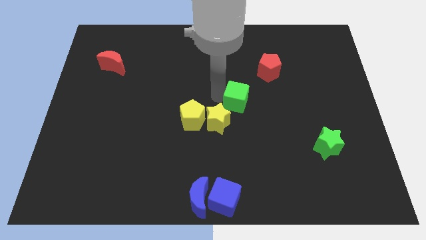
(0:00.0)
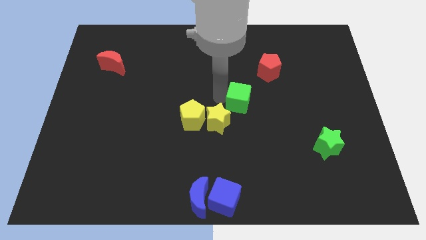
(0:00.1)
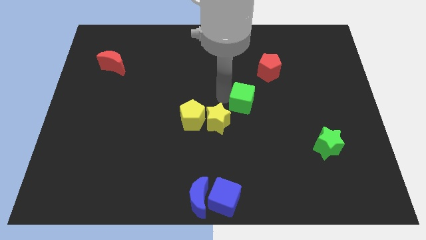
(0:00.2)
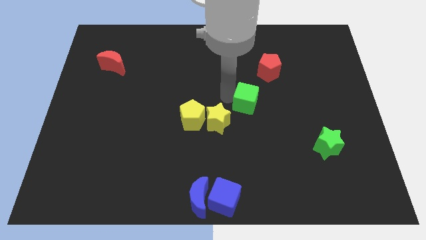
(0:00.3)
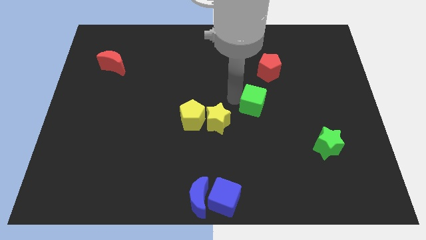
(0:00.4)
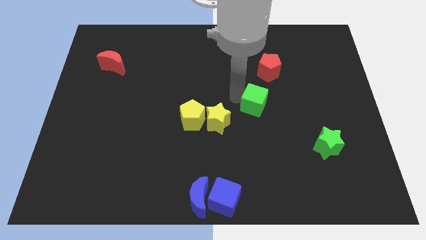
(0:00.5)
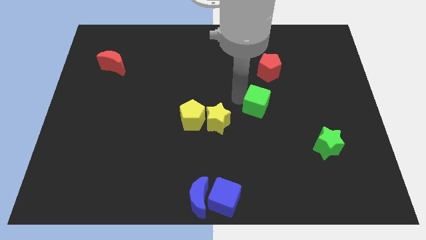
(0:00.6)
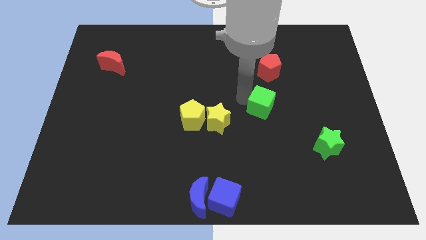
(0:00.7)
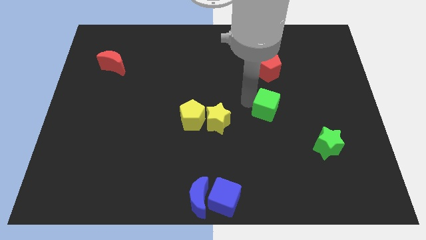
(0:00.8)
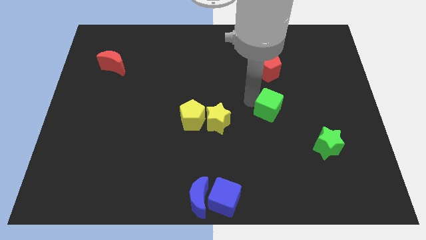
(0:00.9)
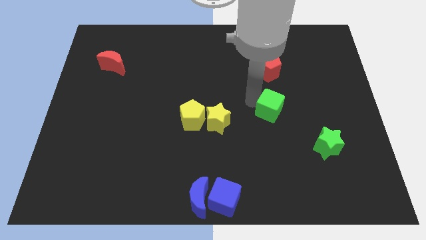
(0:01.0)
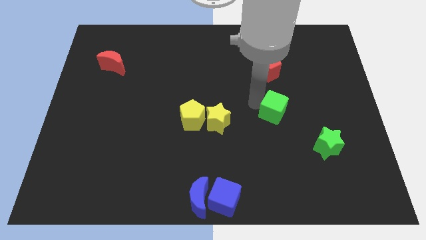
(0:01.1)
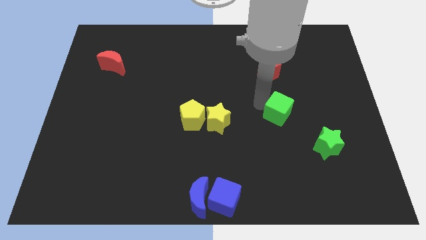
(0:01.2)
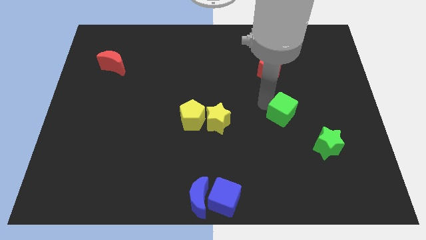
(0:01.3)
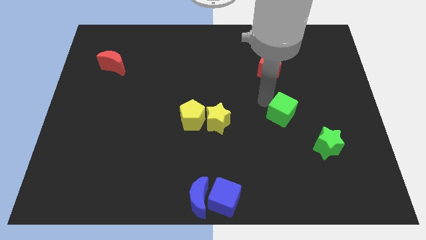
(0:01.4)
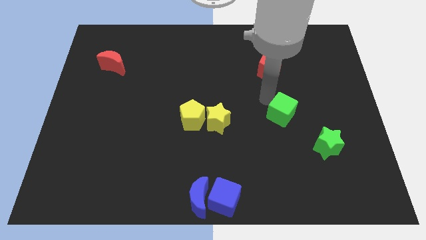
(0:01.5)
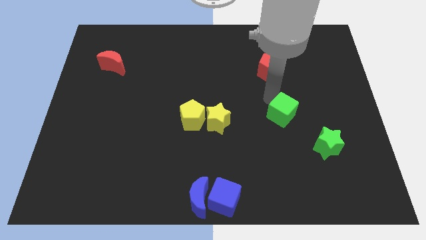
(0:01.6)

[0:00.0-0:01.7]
separate the green cube from yellow blocks

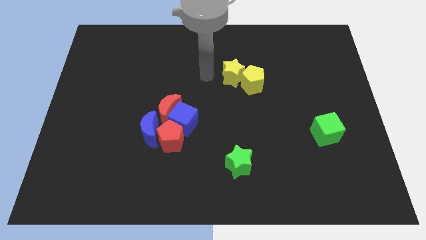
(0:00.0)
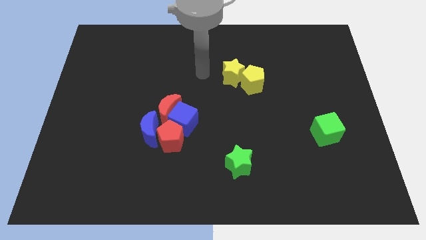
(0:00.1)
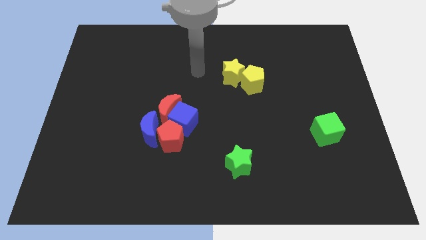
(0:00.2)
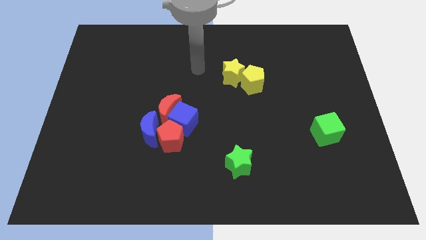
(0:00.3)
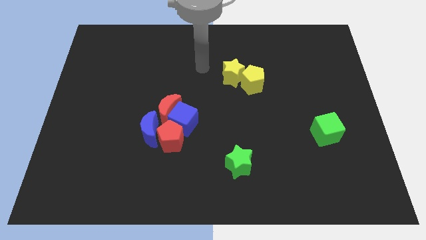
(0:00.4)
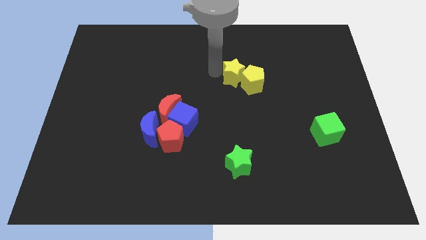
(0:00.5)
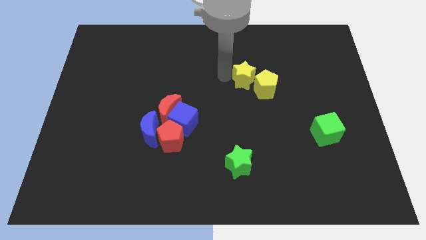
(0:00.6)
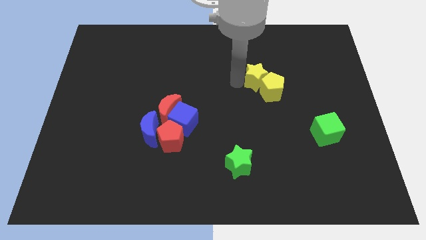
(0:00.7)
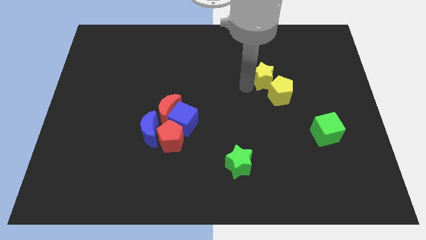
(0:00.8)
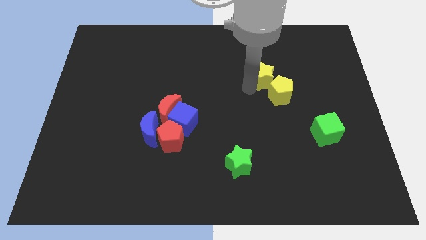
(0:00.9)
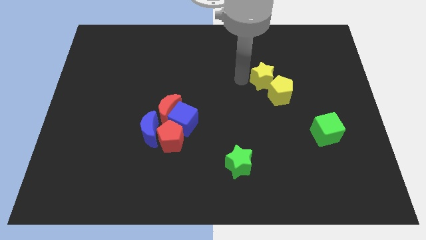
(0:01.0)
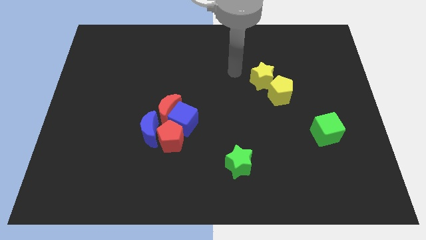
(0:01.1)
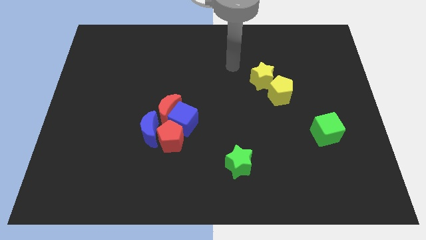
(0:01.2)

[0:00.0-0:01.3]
push the yellow pentagon slightly with the yellow star

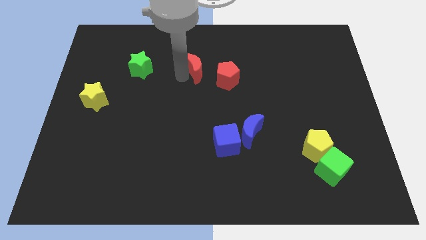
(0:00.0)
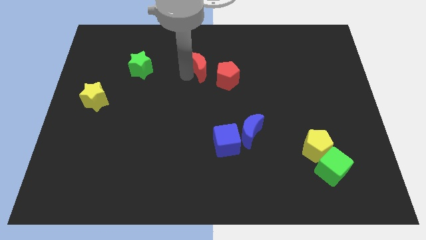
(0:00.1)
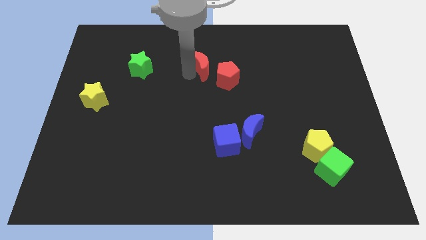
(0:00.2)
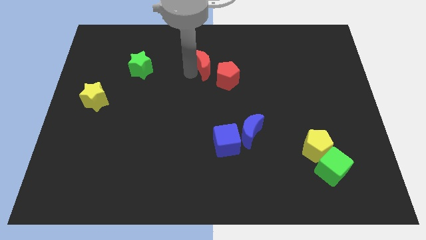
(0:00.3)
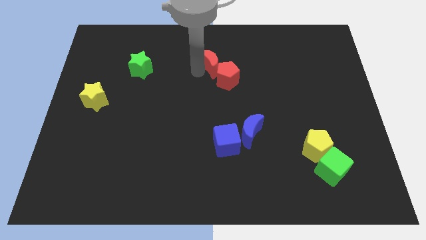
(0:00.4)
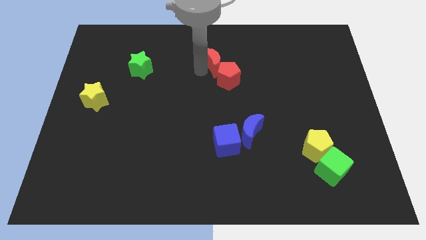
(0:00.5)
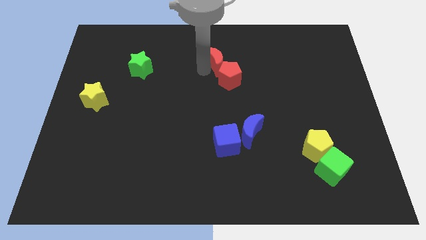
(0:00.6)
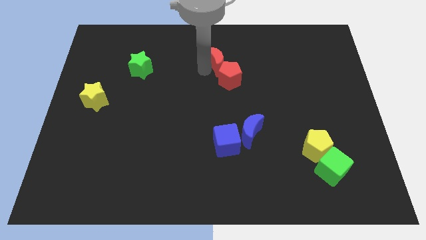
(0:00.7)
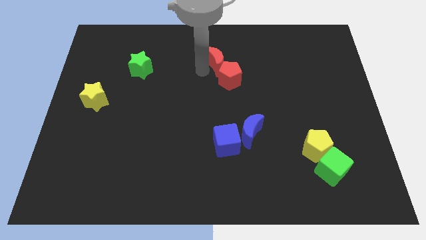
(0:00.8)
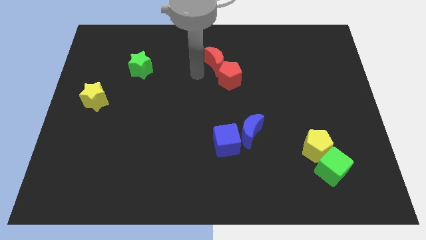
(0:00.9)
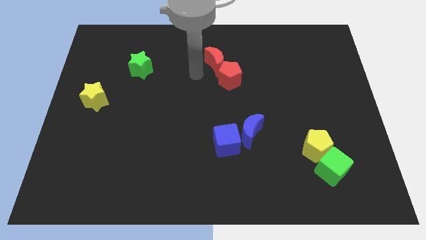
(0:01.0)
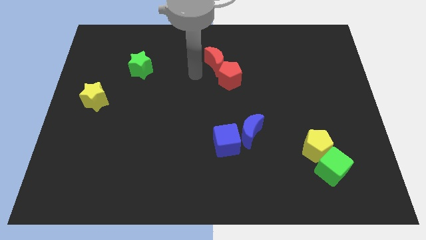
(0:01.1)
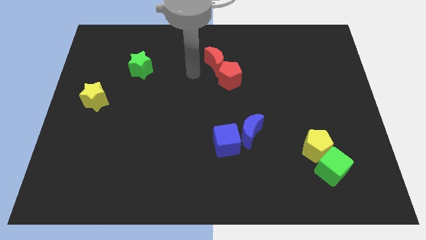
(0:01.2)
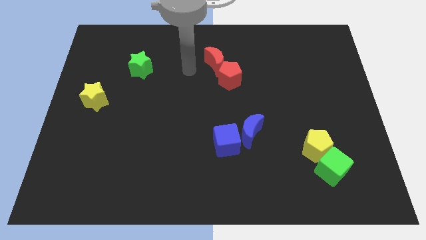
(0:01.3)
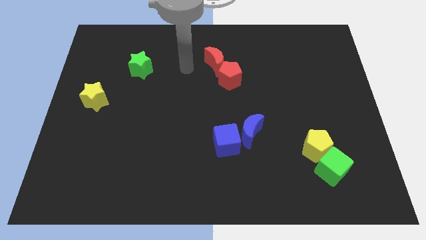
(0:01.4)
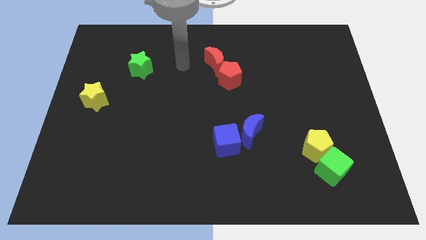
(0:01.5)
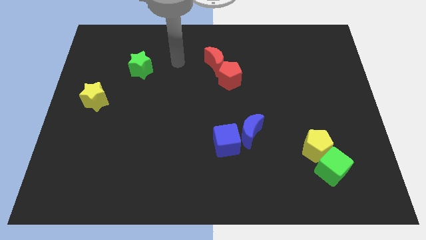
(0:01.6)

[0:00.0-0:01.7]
place the red crescent above the red pentagon

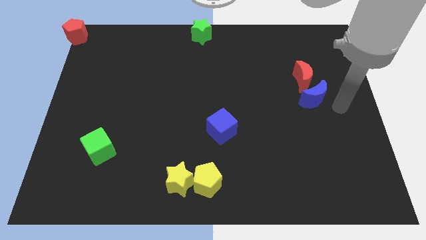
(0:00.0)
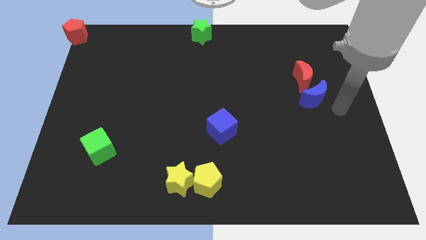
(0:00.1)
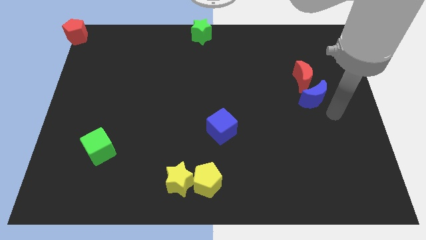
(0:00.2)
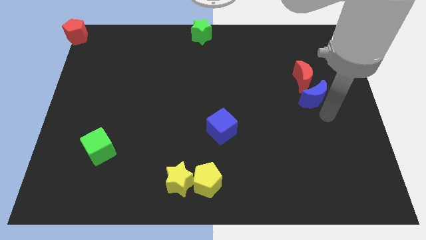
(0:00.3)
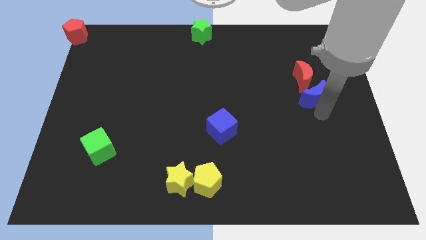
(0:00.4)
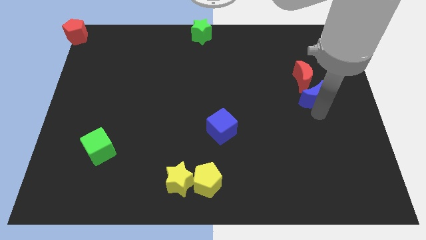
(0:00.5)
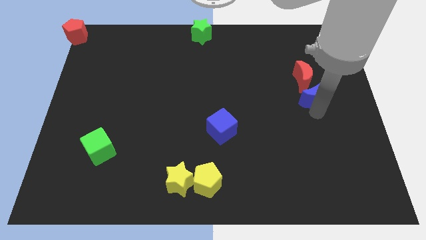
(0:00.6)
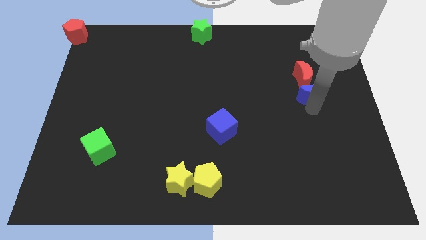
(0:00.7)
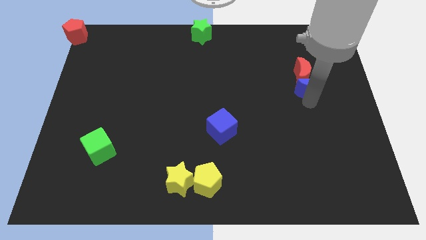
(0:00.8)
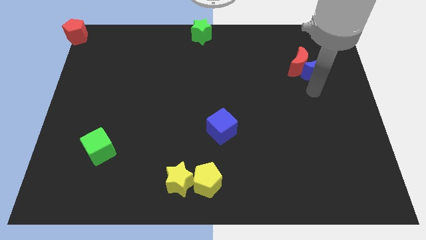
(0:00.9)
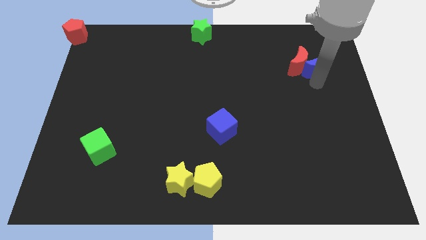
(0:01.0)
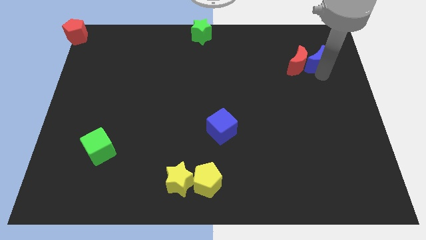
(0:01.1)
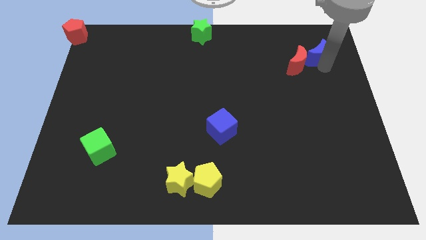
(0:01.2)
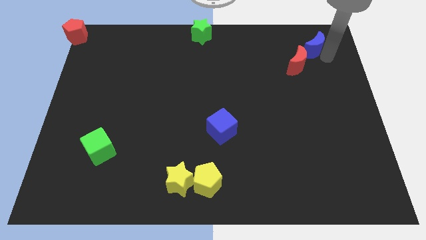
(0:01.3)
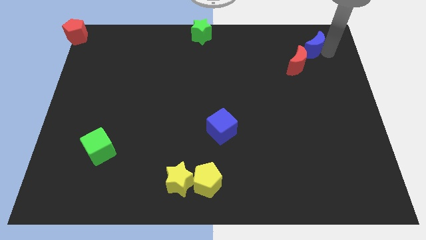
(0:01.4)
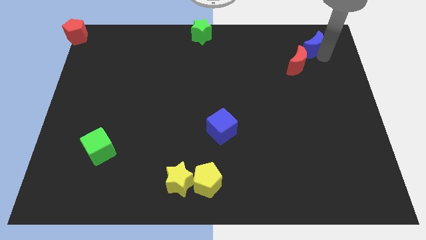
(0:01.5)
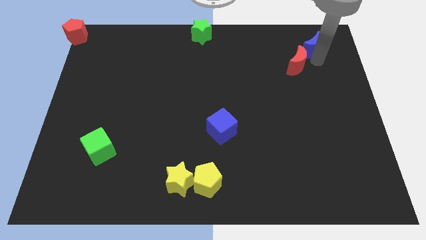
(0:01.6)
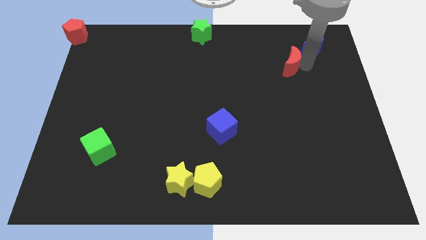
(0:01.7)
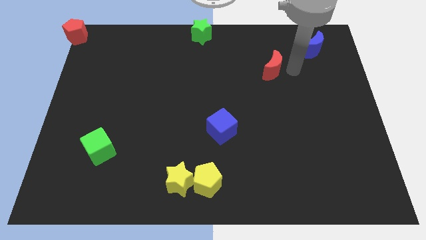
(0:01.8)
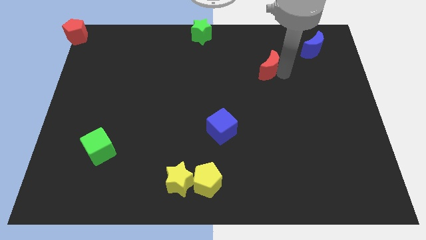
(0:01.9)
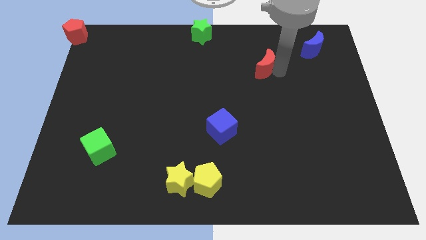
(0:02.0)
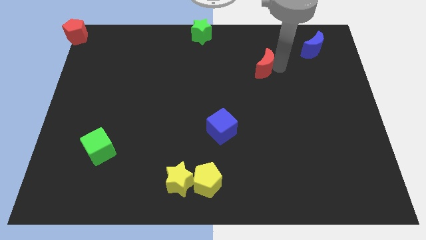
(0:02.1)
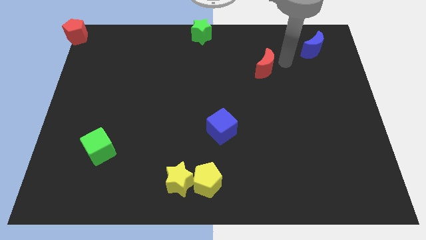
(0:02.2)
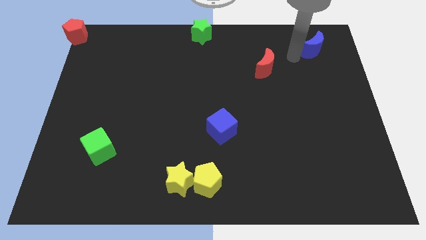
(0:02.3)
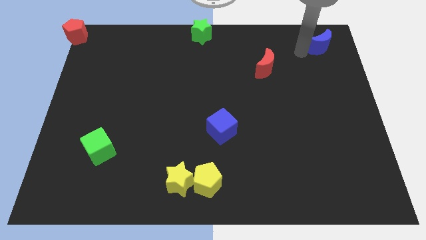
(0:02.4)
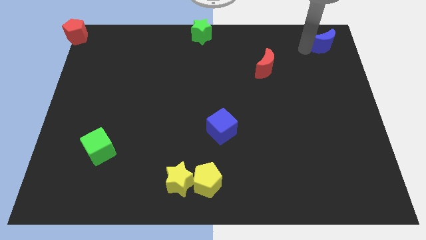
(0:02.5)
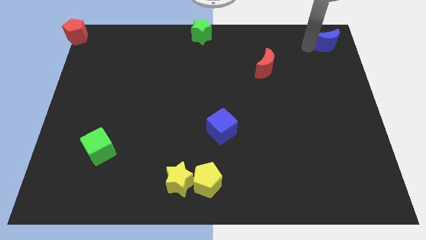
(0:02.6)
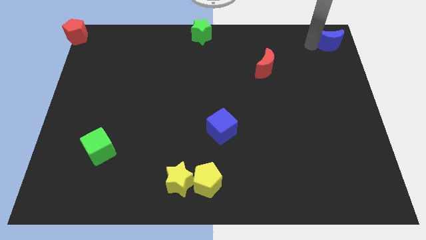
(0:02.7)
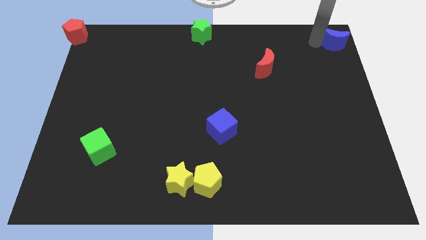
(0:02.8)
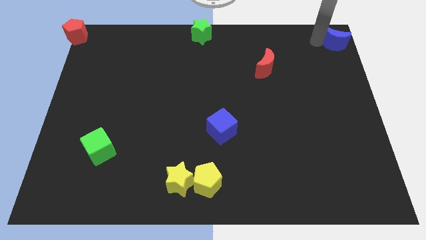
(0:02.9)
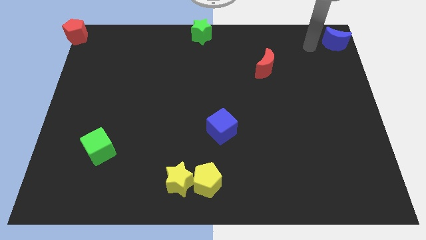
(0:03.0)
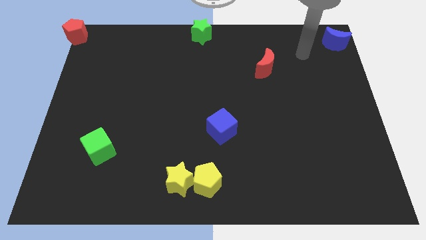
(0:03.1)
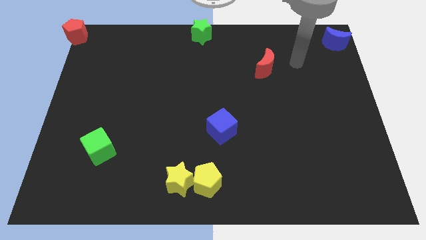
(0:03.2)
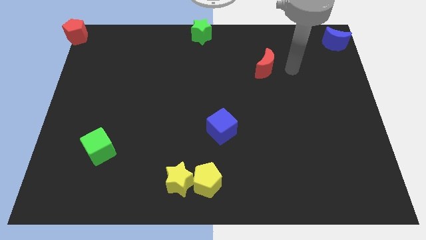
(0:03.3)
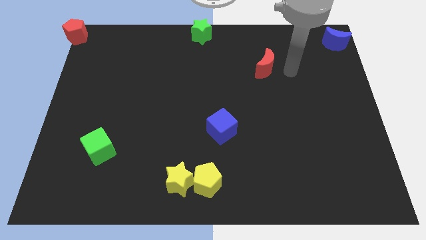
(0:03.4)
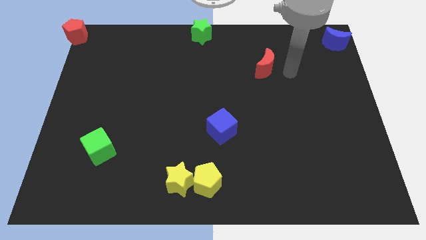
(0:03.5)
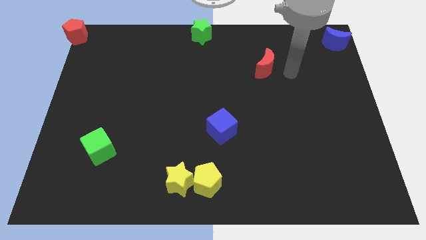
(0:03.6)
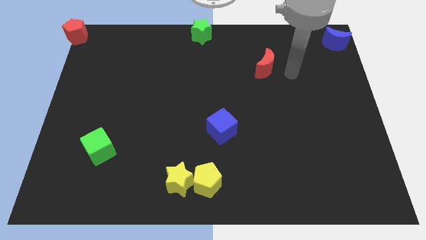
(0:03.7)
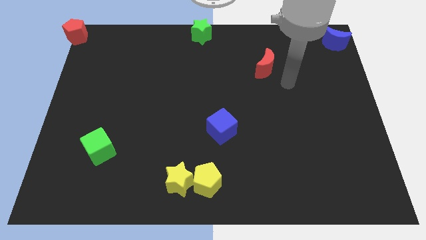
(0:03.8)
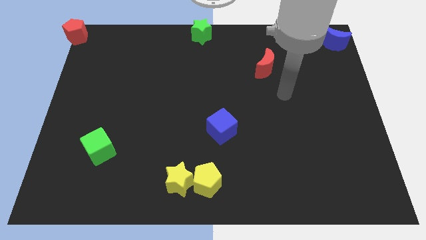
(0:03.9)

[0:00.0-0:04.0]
separate the red moon from the blue moon

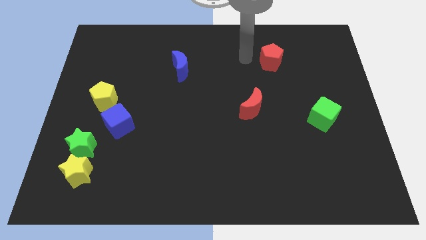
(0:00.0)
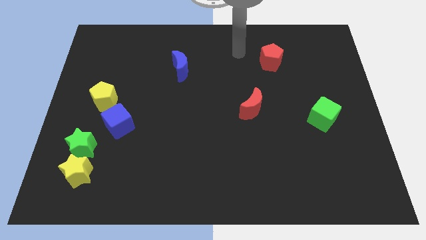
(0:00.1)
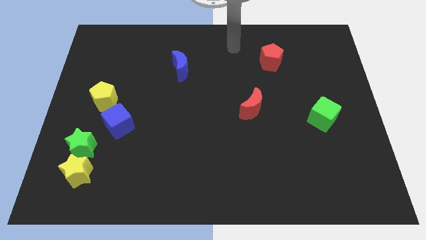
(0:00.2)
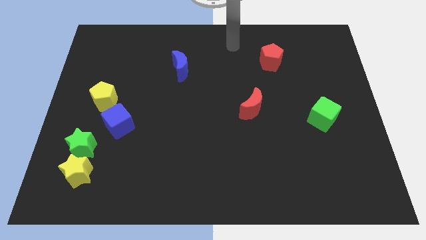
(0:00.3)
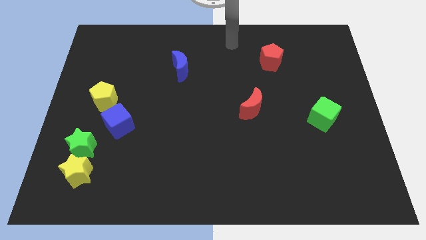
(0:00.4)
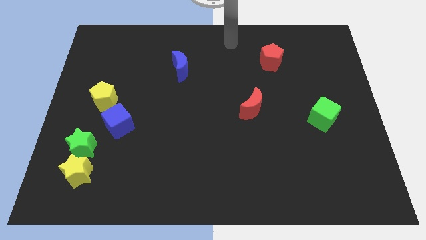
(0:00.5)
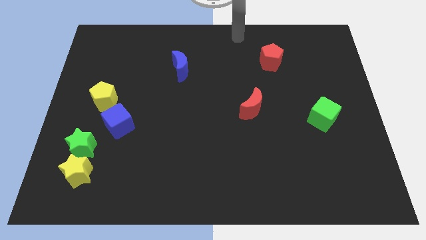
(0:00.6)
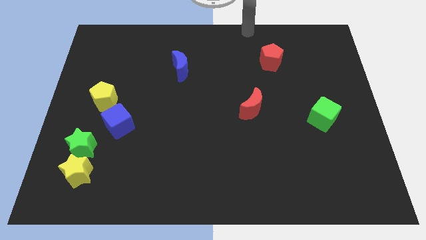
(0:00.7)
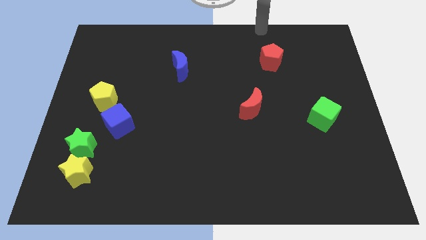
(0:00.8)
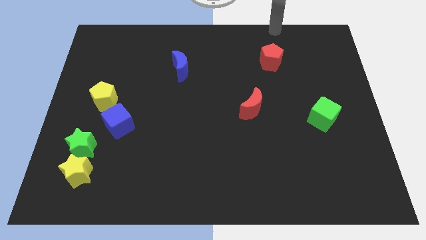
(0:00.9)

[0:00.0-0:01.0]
point your arm at the top of the red pentagon
